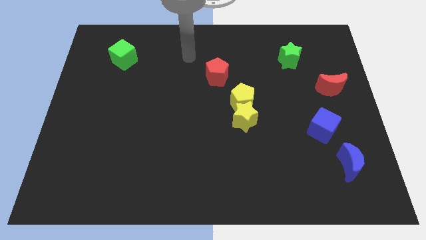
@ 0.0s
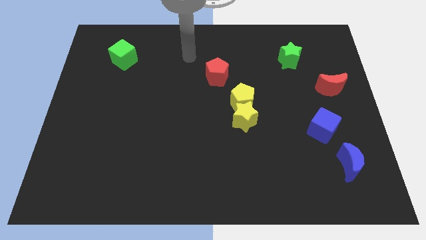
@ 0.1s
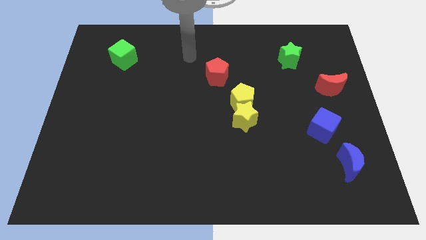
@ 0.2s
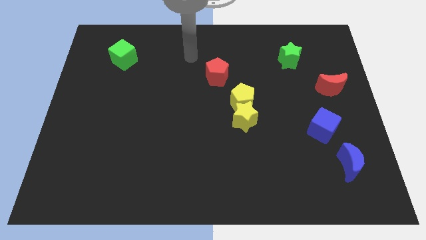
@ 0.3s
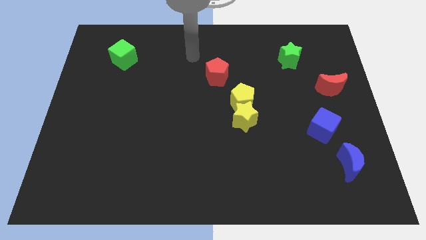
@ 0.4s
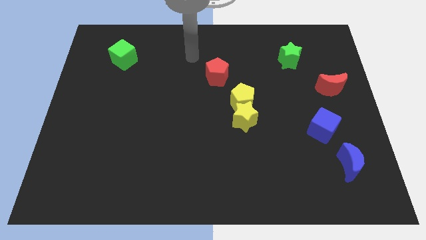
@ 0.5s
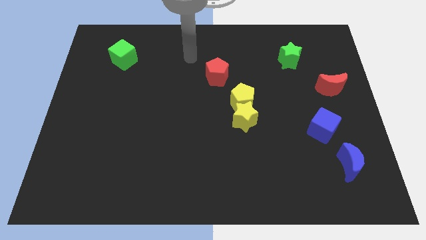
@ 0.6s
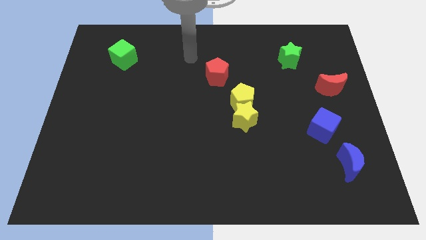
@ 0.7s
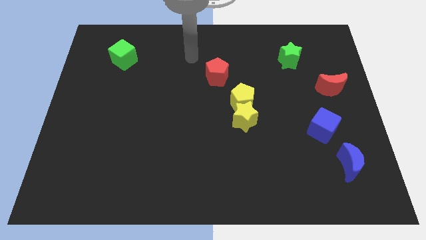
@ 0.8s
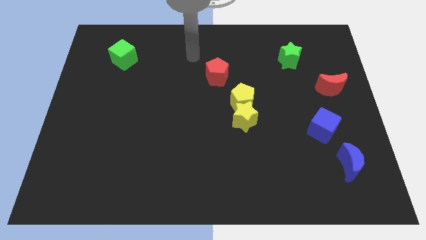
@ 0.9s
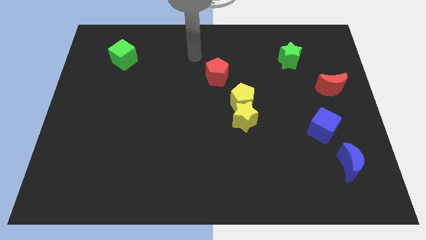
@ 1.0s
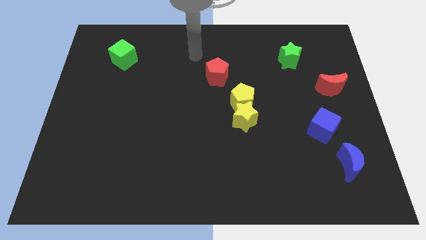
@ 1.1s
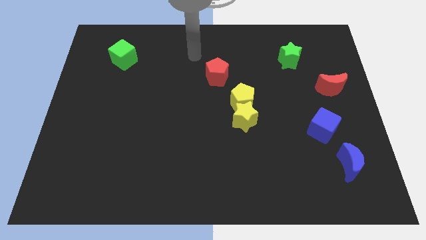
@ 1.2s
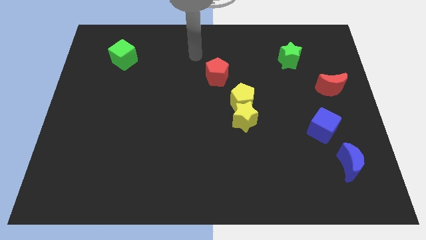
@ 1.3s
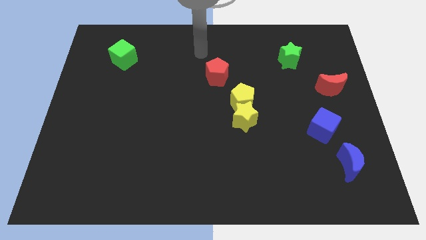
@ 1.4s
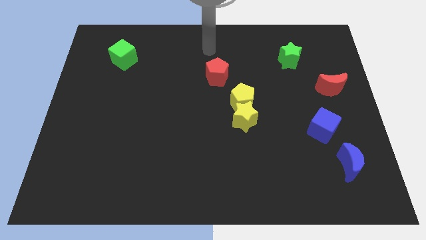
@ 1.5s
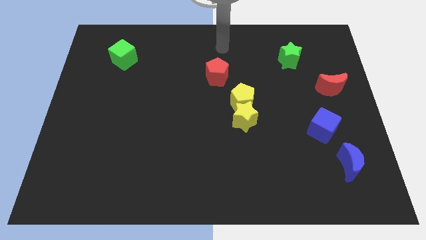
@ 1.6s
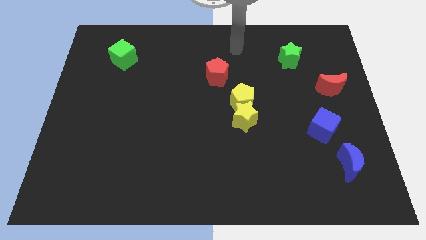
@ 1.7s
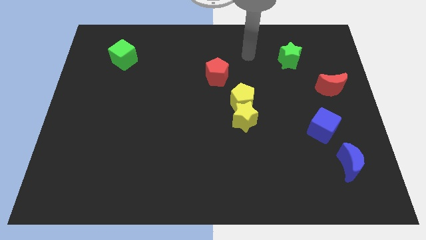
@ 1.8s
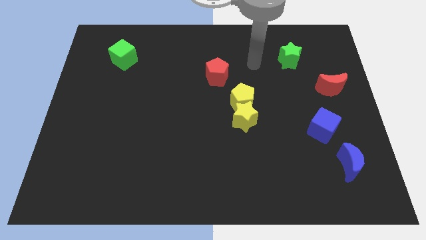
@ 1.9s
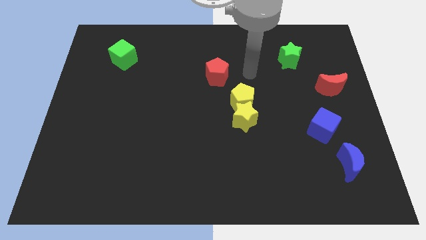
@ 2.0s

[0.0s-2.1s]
place the arm in between the green star and res pentagon

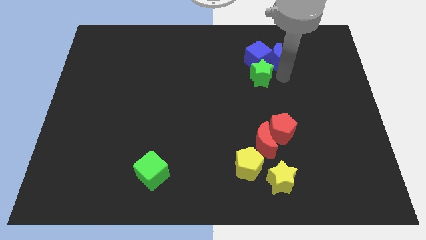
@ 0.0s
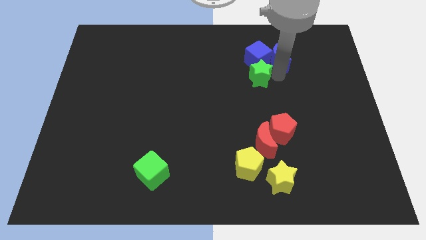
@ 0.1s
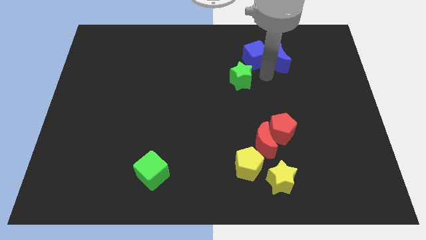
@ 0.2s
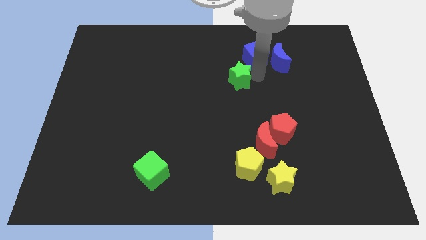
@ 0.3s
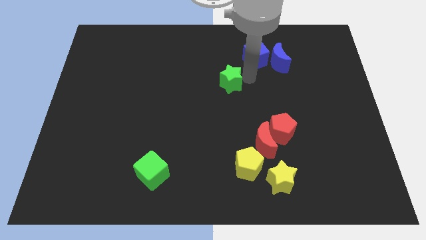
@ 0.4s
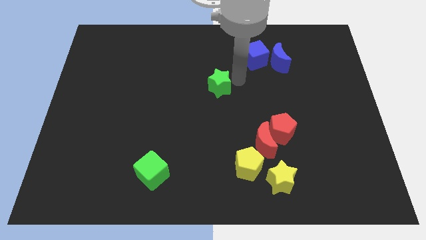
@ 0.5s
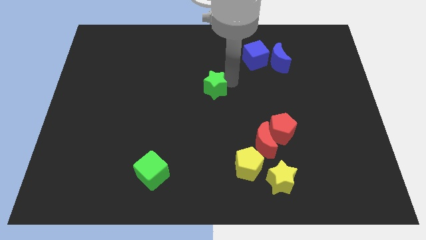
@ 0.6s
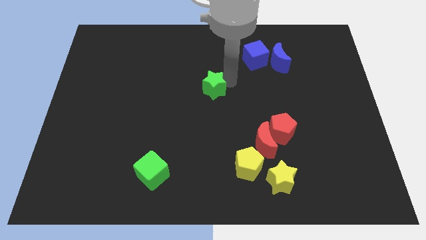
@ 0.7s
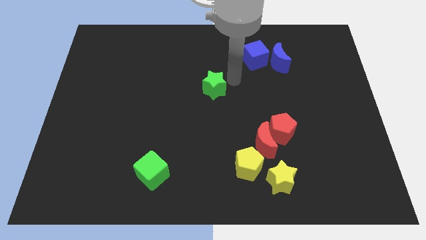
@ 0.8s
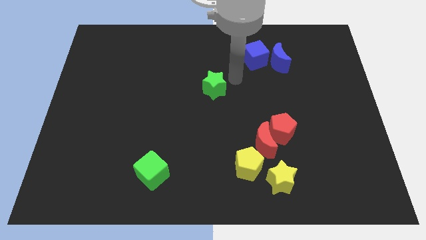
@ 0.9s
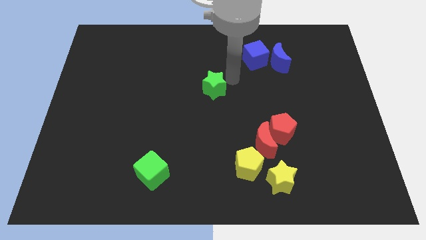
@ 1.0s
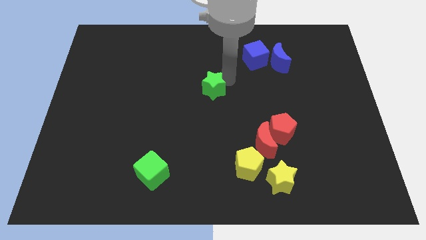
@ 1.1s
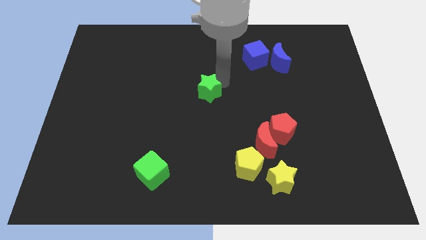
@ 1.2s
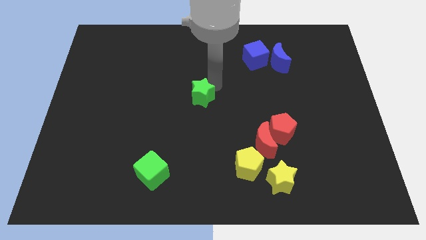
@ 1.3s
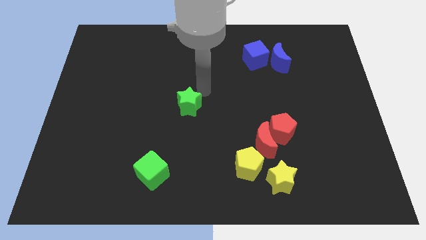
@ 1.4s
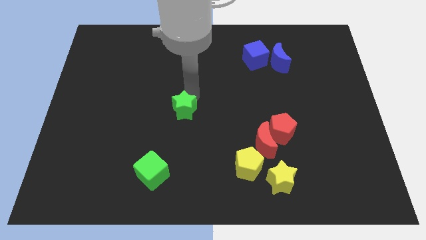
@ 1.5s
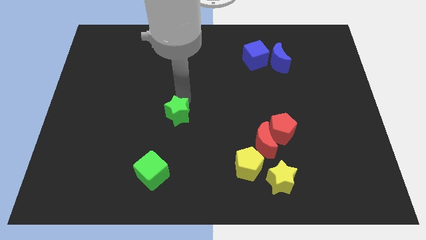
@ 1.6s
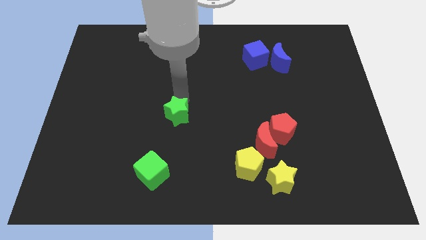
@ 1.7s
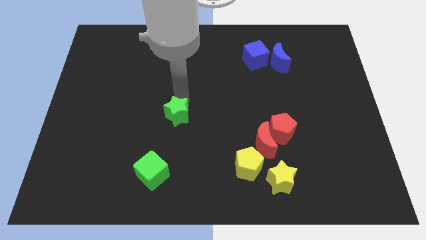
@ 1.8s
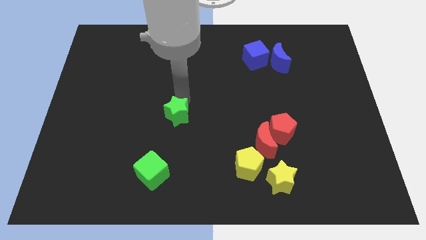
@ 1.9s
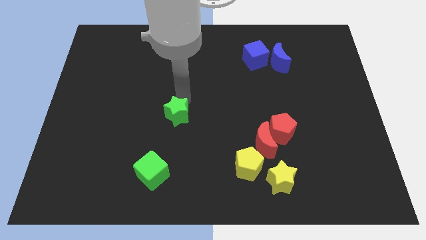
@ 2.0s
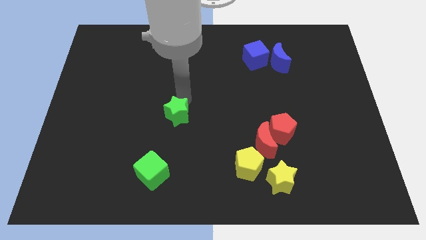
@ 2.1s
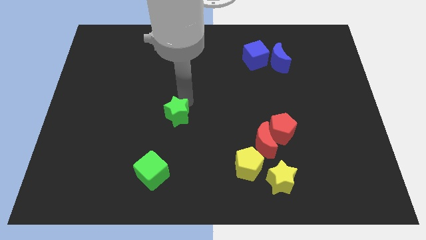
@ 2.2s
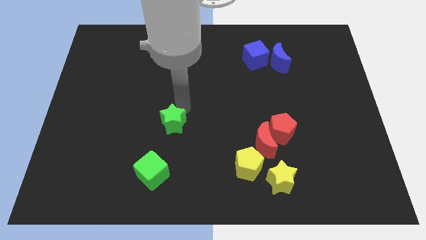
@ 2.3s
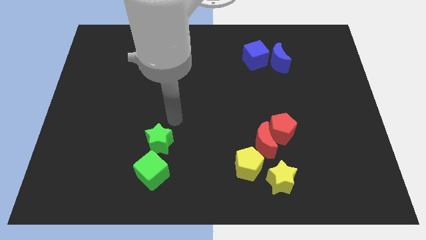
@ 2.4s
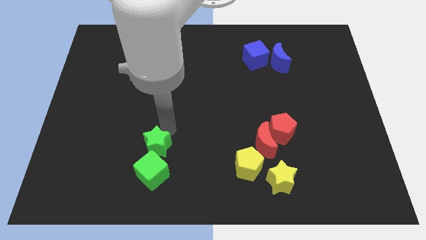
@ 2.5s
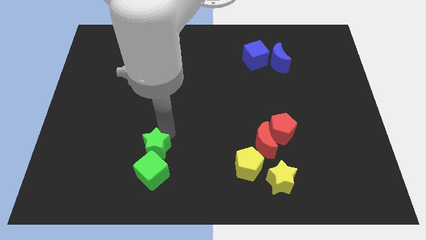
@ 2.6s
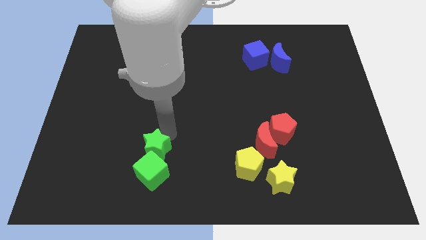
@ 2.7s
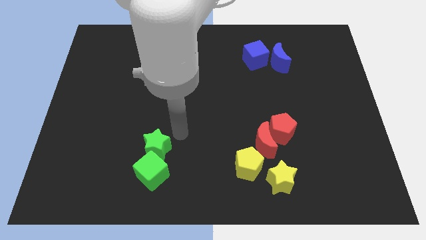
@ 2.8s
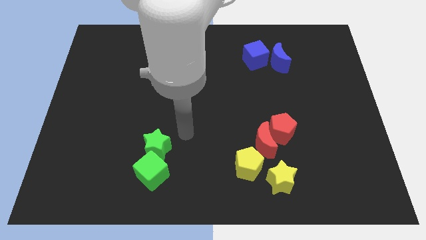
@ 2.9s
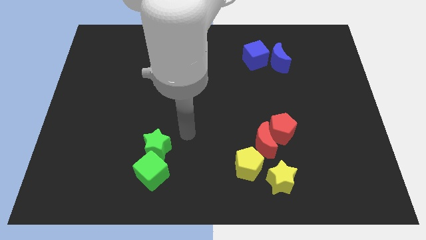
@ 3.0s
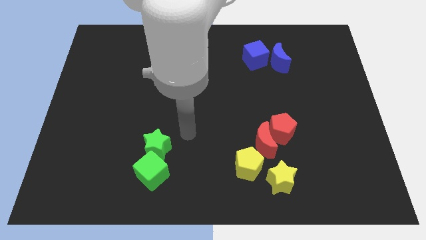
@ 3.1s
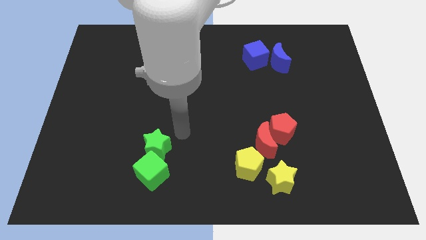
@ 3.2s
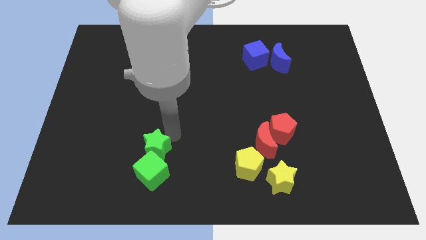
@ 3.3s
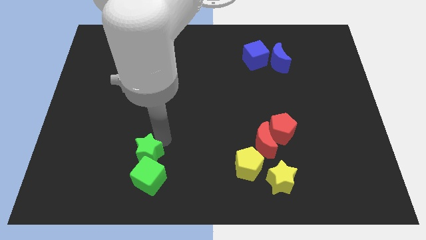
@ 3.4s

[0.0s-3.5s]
place green star to the top of green cube

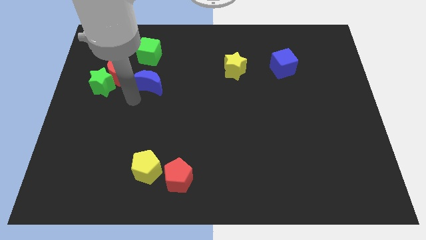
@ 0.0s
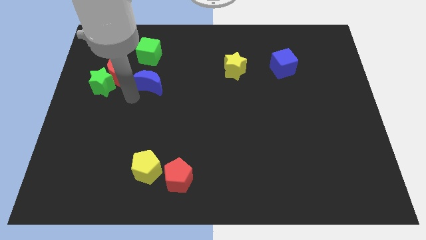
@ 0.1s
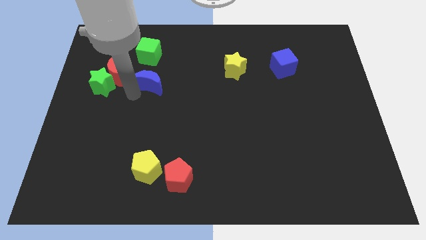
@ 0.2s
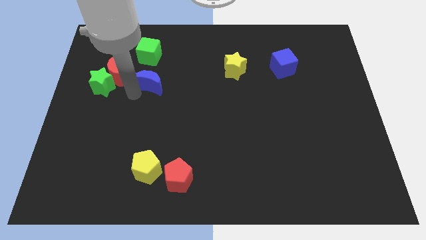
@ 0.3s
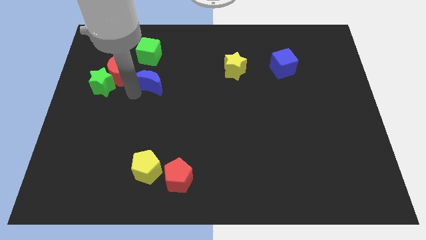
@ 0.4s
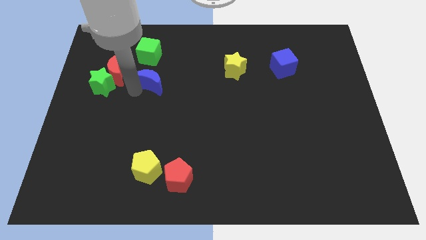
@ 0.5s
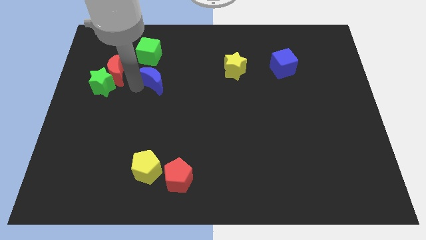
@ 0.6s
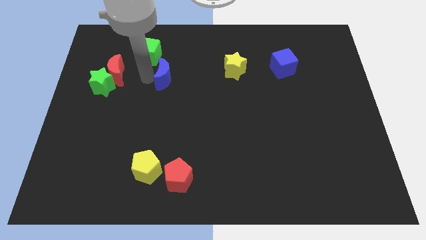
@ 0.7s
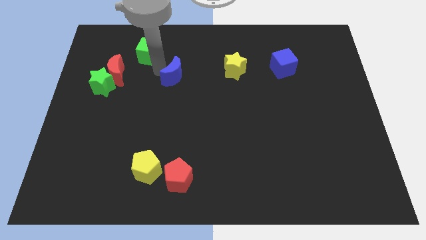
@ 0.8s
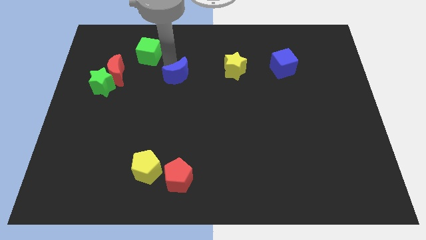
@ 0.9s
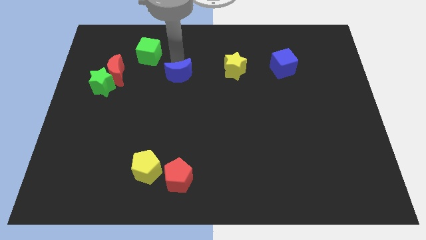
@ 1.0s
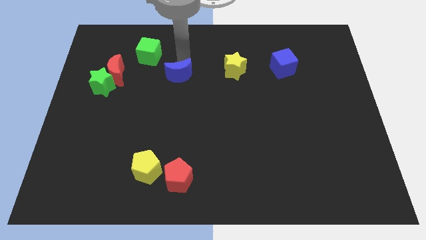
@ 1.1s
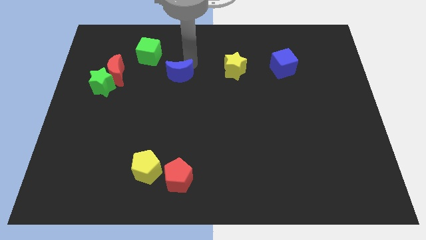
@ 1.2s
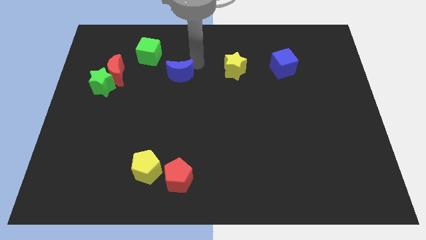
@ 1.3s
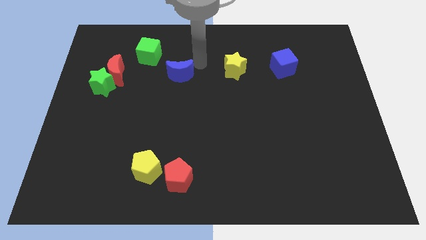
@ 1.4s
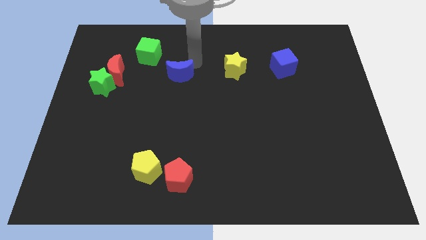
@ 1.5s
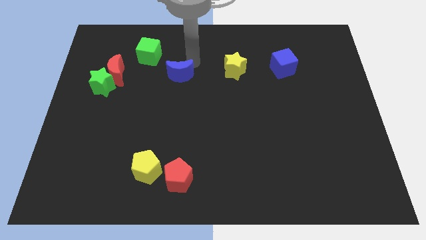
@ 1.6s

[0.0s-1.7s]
place the blue crescent to the left of the yellow star

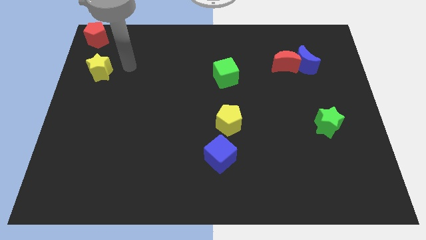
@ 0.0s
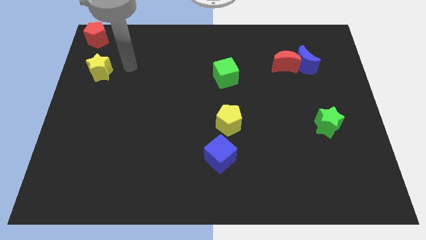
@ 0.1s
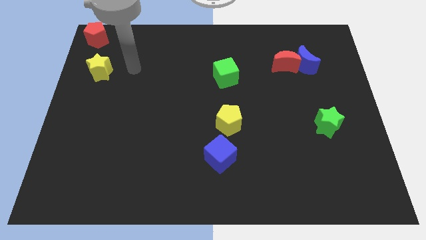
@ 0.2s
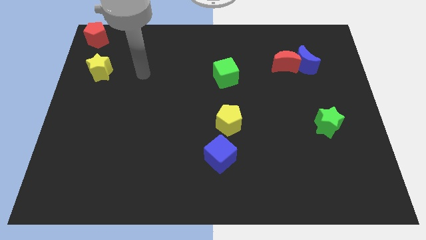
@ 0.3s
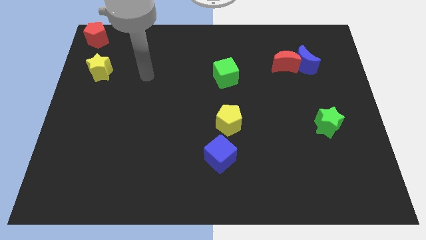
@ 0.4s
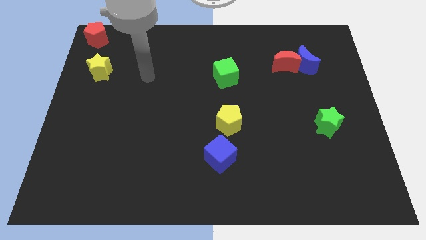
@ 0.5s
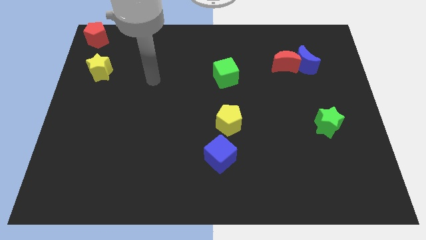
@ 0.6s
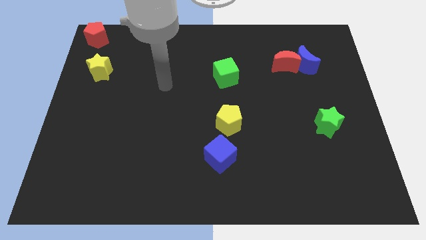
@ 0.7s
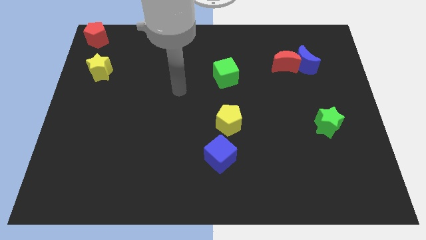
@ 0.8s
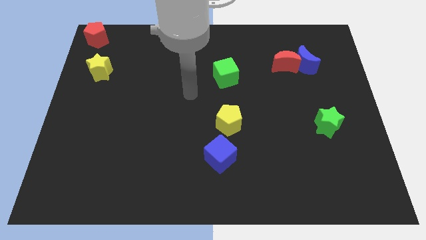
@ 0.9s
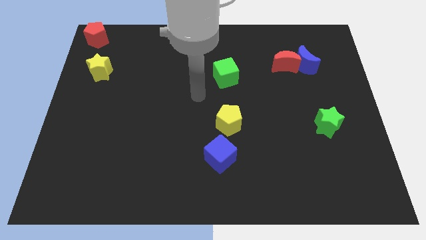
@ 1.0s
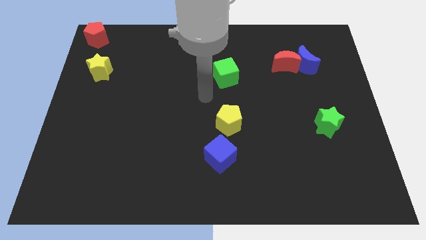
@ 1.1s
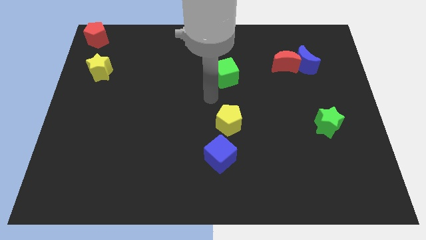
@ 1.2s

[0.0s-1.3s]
place arm in the center

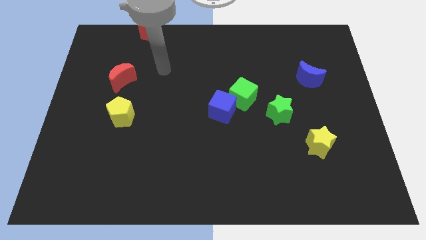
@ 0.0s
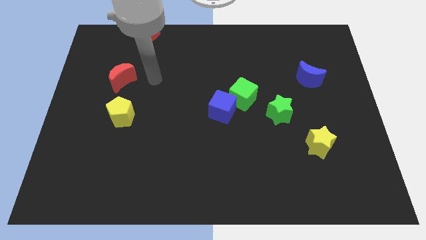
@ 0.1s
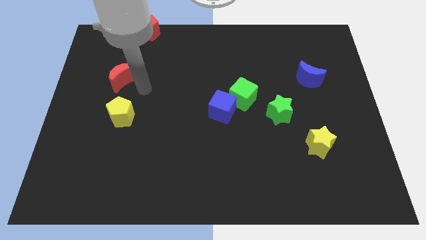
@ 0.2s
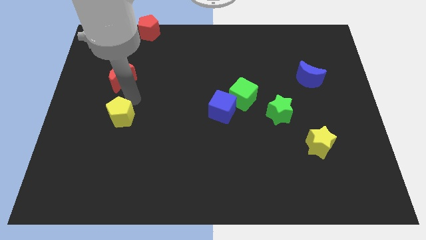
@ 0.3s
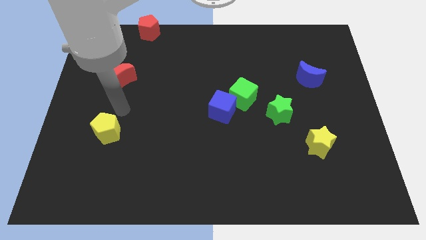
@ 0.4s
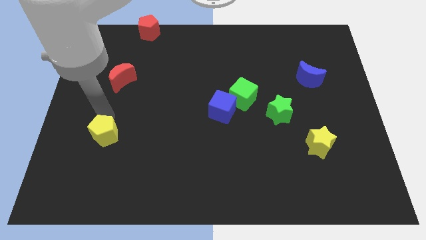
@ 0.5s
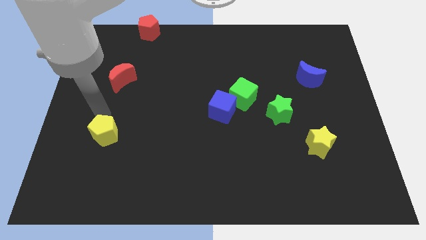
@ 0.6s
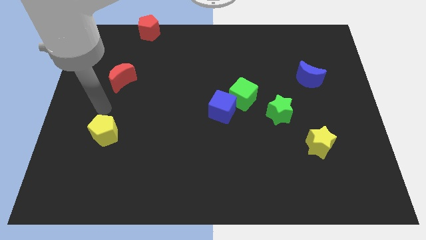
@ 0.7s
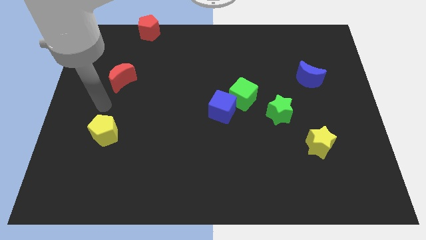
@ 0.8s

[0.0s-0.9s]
move yellow pentagon slightly left bottom
